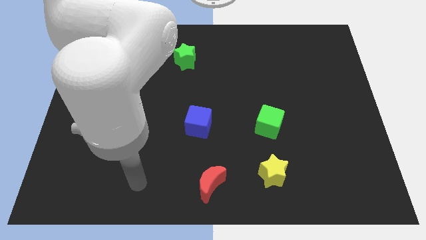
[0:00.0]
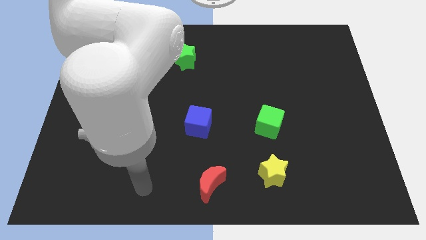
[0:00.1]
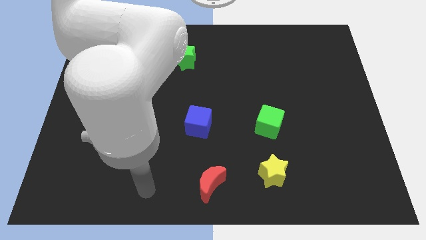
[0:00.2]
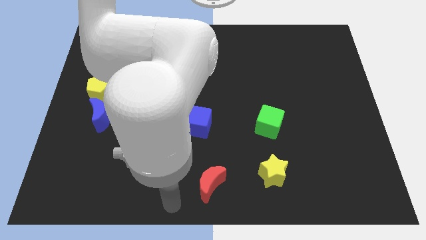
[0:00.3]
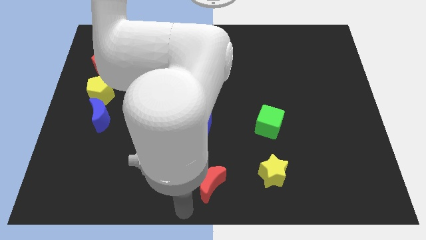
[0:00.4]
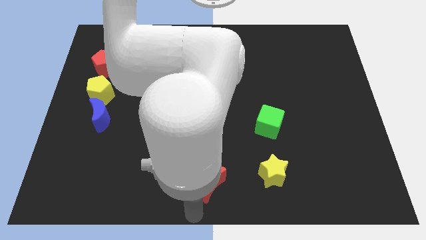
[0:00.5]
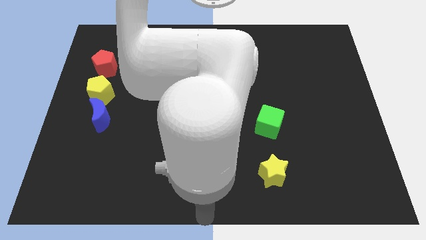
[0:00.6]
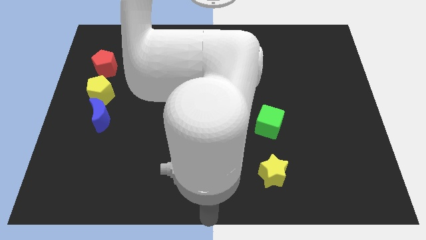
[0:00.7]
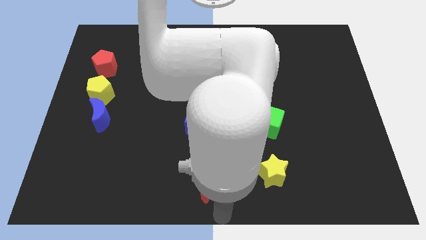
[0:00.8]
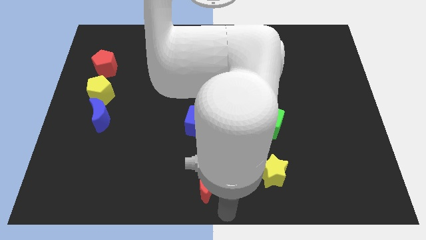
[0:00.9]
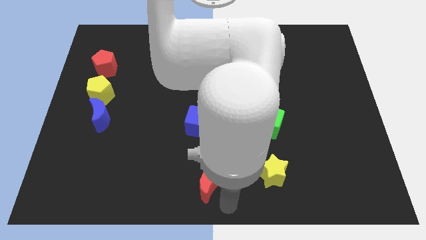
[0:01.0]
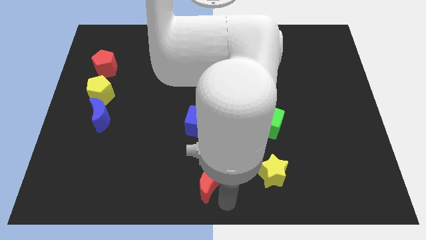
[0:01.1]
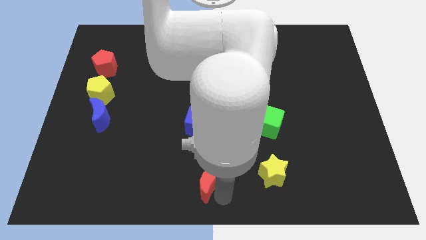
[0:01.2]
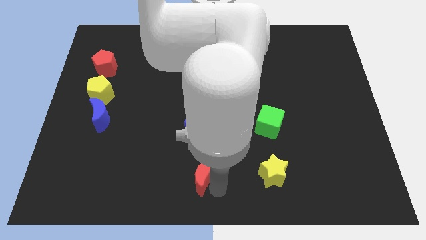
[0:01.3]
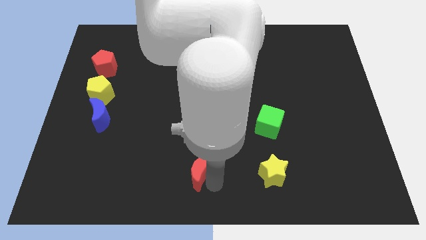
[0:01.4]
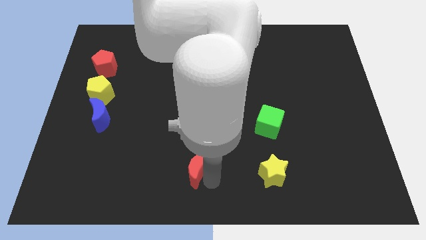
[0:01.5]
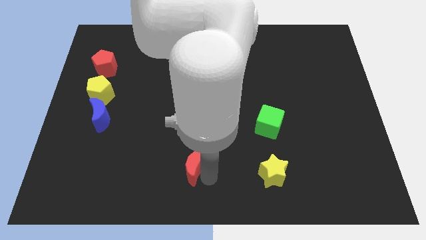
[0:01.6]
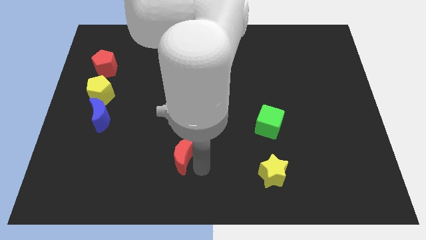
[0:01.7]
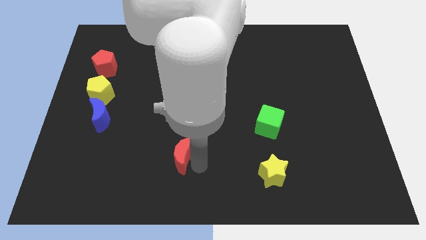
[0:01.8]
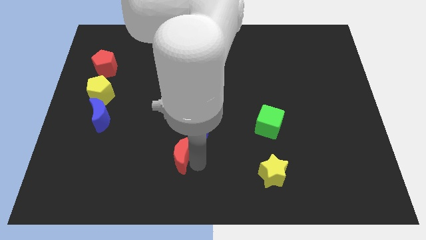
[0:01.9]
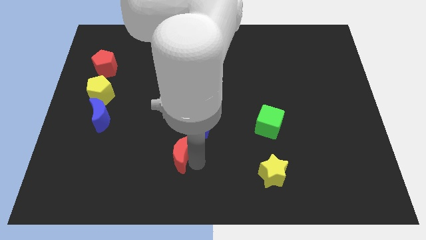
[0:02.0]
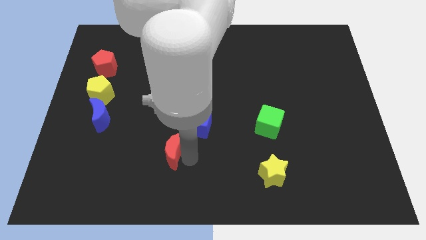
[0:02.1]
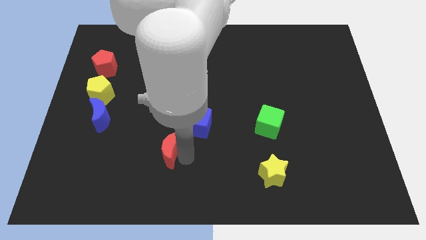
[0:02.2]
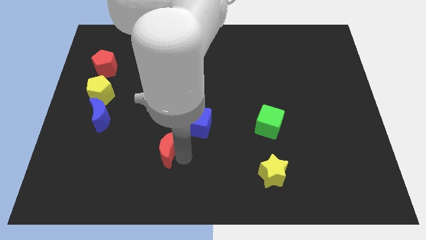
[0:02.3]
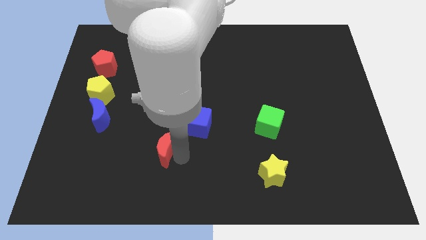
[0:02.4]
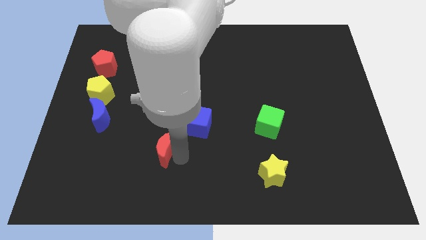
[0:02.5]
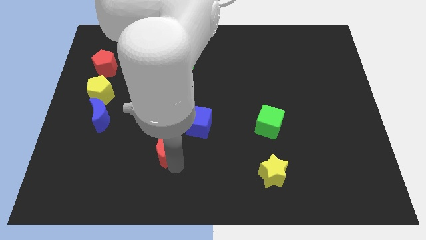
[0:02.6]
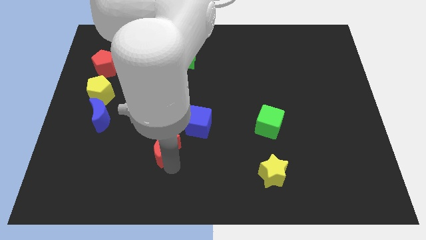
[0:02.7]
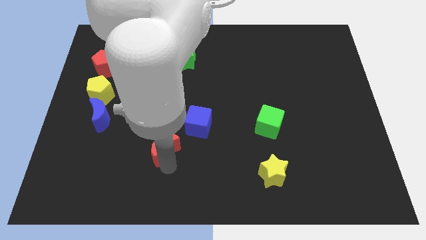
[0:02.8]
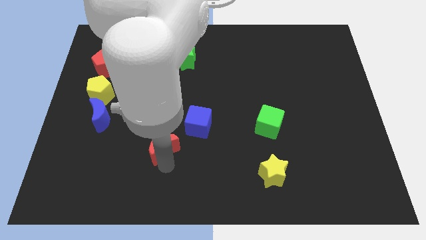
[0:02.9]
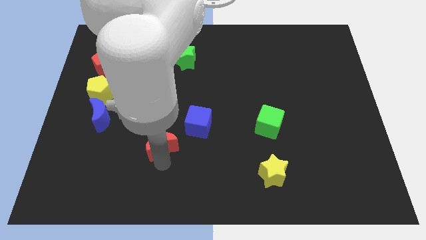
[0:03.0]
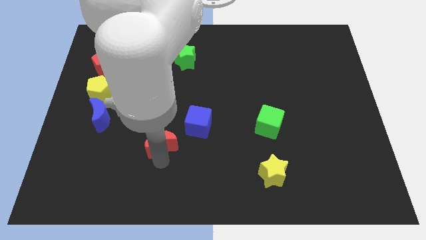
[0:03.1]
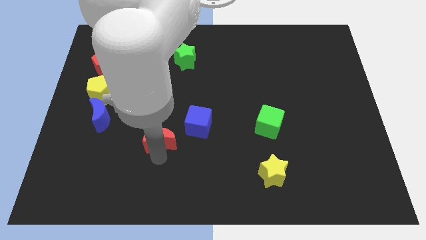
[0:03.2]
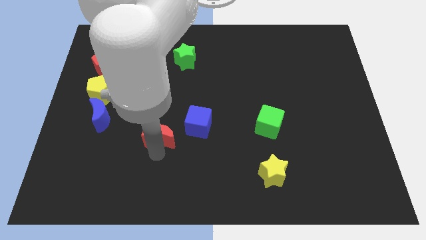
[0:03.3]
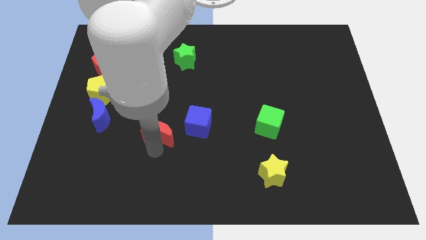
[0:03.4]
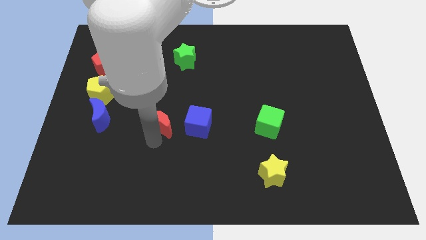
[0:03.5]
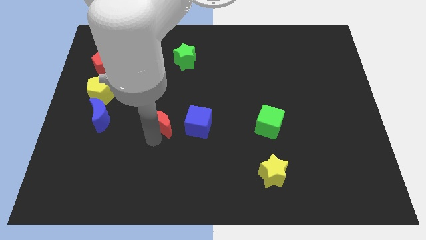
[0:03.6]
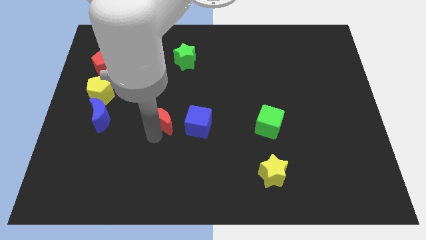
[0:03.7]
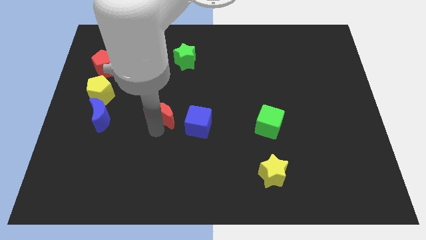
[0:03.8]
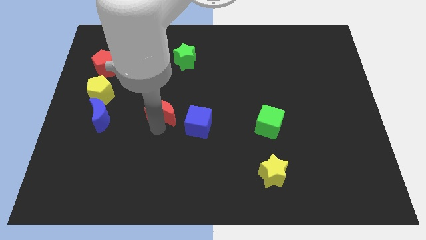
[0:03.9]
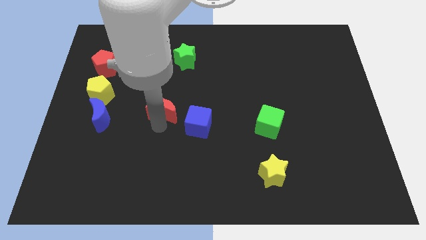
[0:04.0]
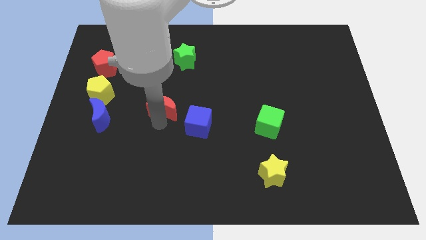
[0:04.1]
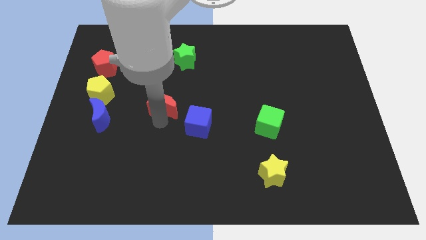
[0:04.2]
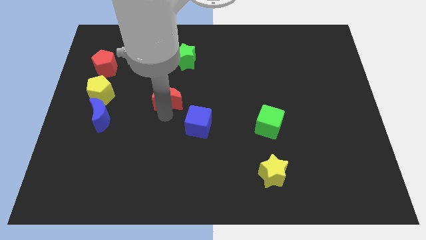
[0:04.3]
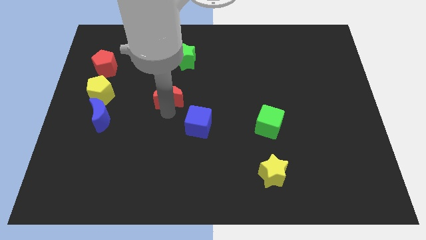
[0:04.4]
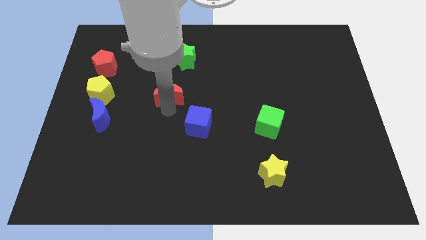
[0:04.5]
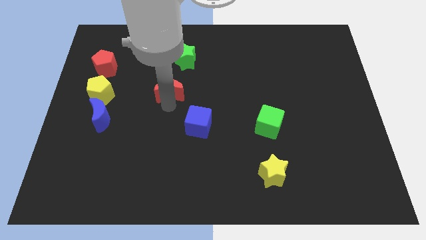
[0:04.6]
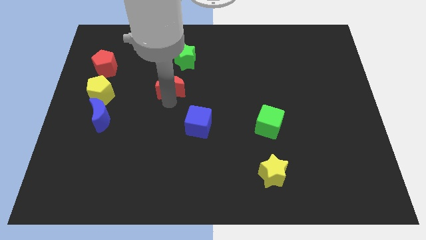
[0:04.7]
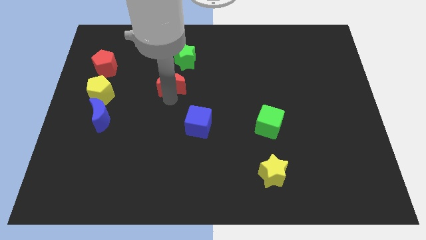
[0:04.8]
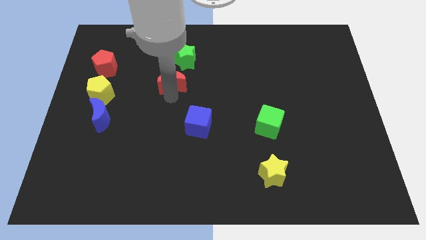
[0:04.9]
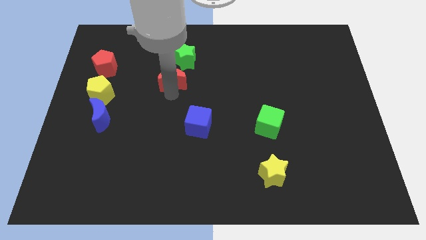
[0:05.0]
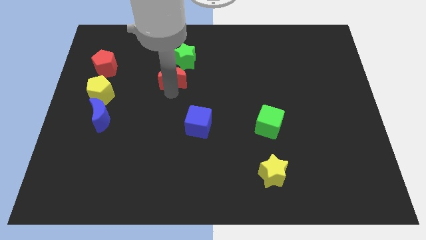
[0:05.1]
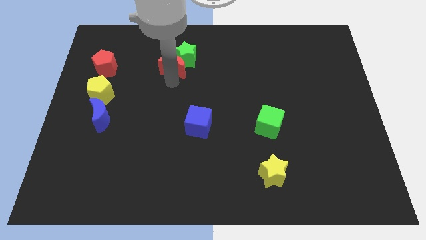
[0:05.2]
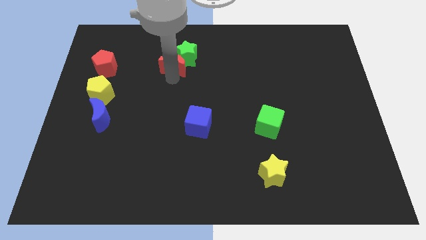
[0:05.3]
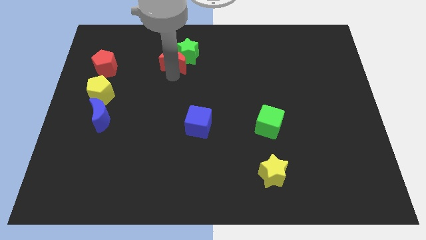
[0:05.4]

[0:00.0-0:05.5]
put the red moon to the green star

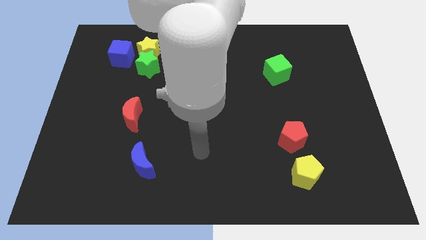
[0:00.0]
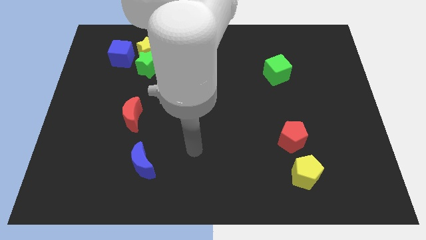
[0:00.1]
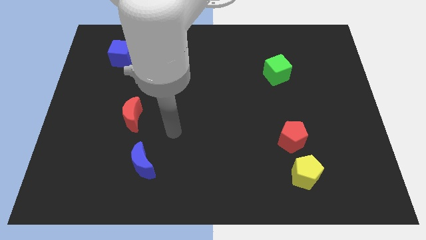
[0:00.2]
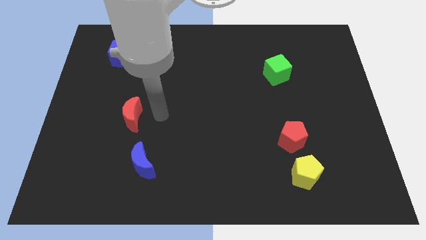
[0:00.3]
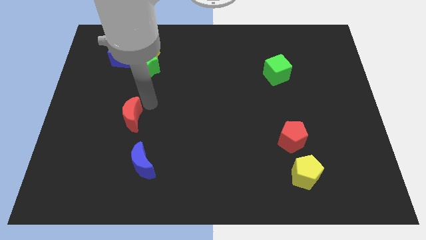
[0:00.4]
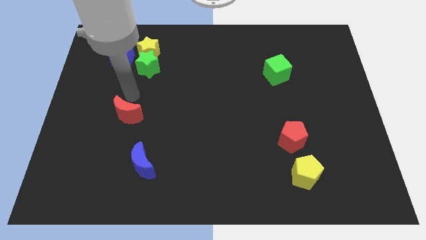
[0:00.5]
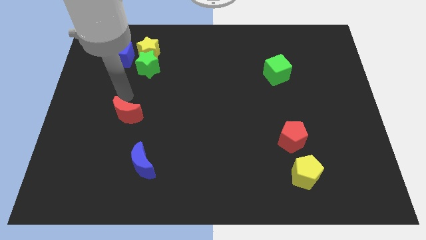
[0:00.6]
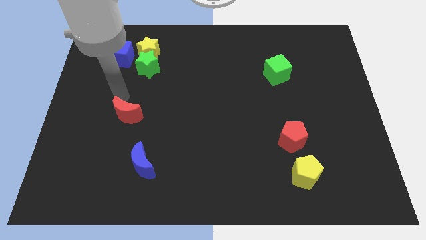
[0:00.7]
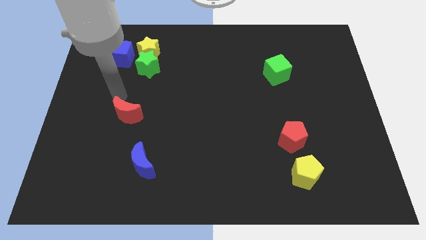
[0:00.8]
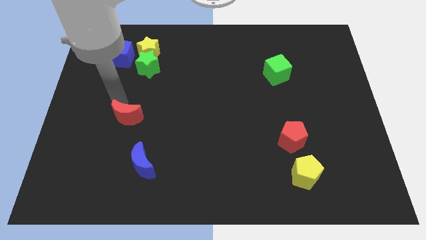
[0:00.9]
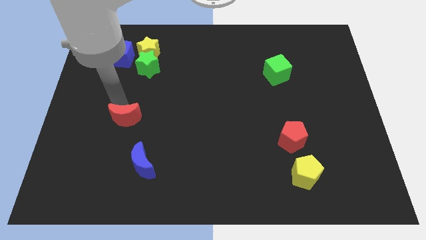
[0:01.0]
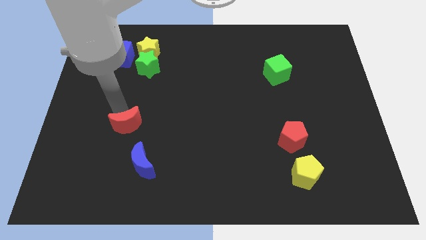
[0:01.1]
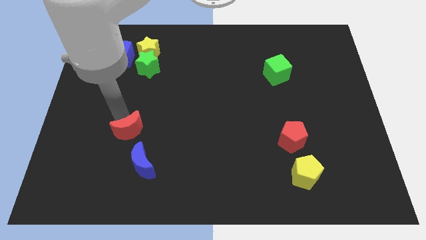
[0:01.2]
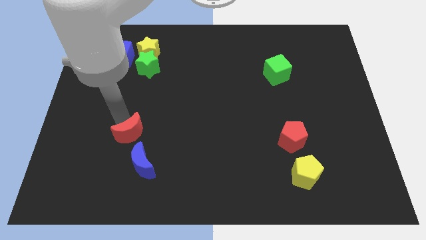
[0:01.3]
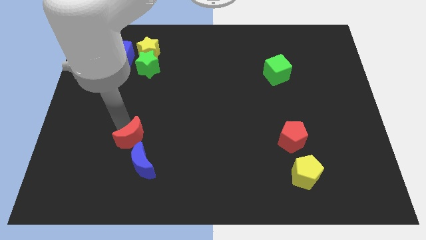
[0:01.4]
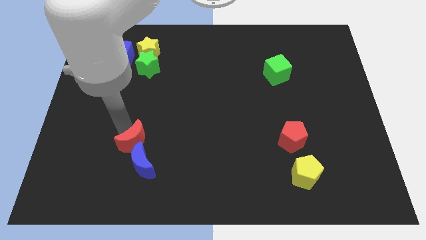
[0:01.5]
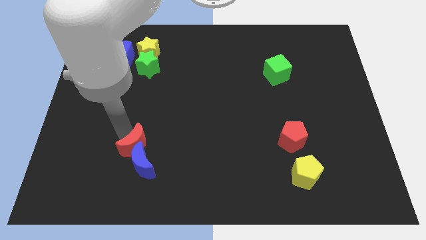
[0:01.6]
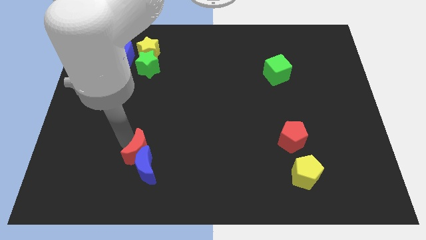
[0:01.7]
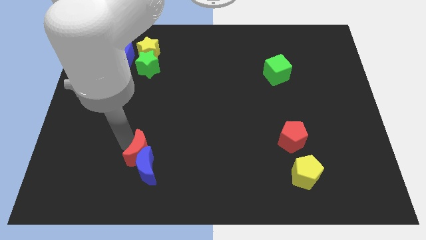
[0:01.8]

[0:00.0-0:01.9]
move the red moon next to the blue moon

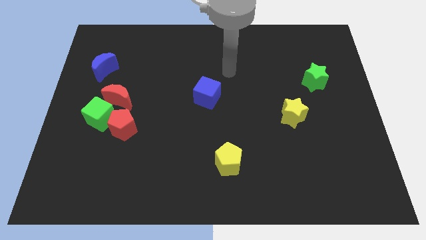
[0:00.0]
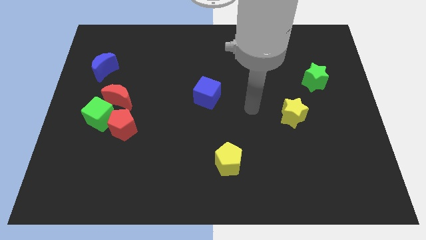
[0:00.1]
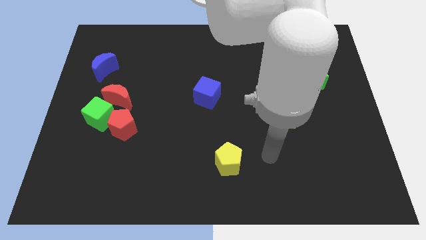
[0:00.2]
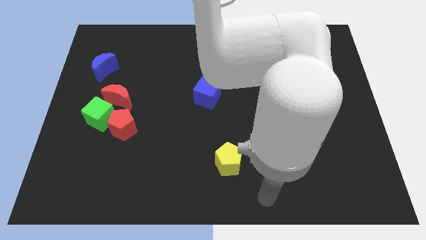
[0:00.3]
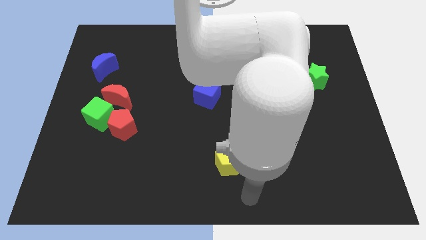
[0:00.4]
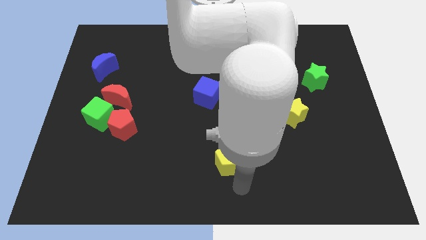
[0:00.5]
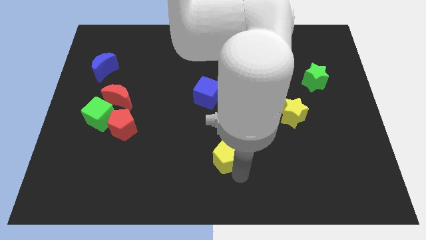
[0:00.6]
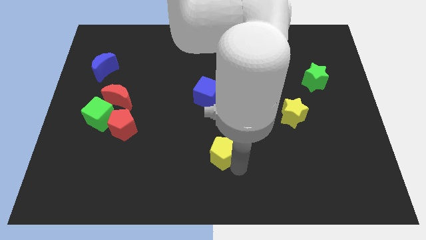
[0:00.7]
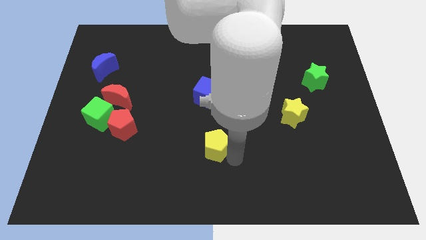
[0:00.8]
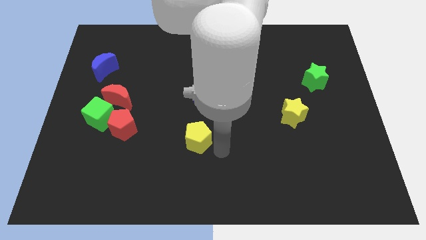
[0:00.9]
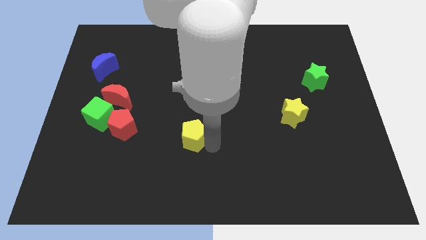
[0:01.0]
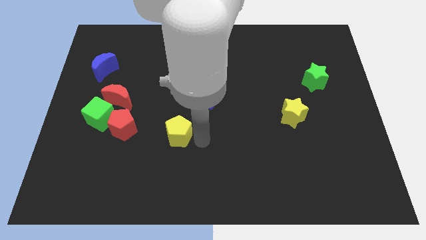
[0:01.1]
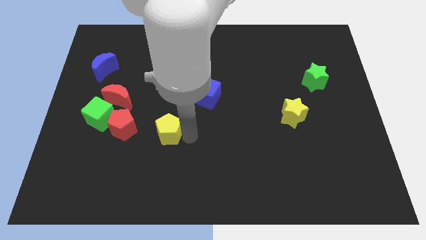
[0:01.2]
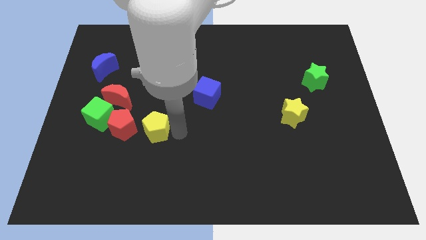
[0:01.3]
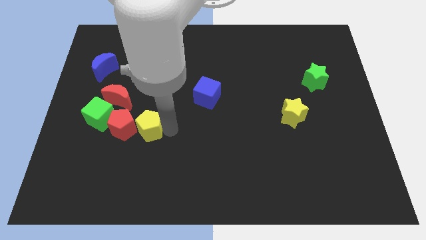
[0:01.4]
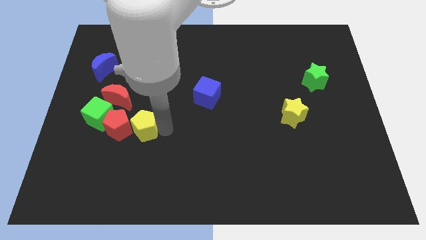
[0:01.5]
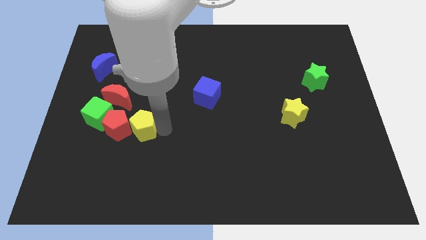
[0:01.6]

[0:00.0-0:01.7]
slide the yellow pentagon towards the red pentagon
